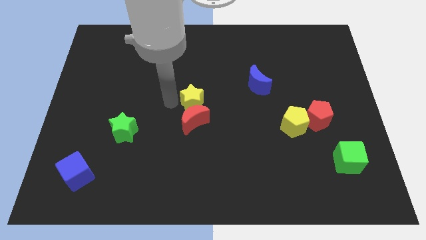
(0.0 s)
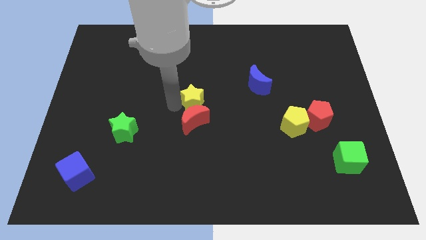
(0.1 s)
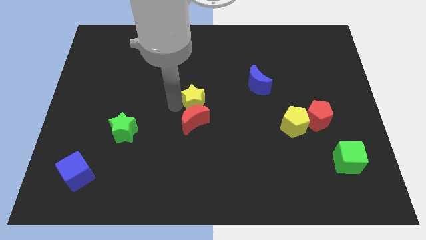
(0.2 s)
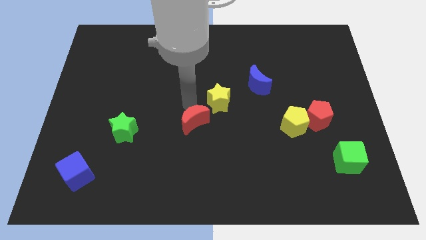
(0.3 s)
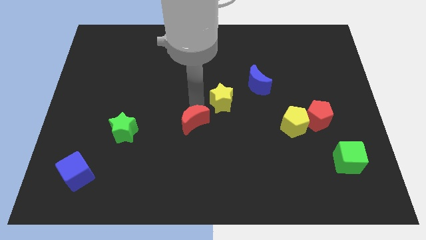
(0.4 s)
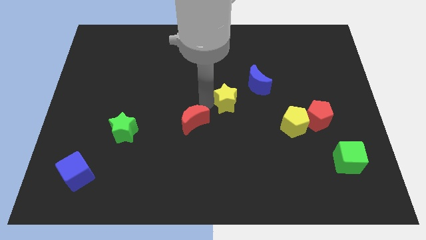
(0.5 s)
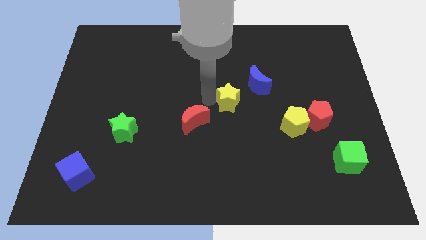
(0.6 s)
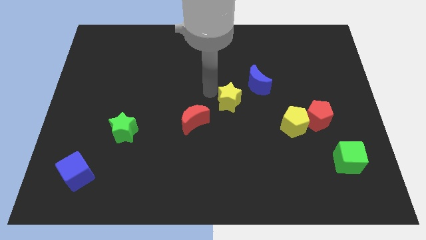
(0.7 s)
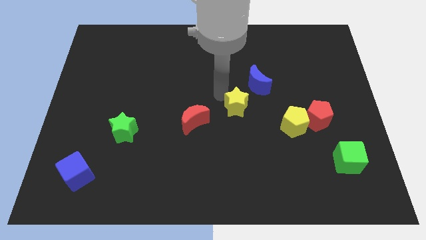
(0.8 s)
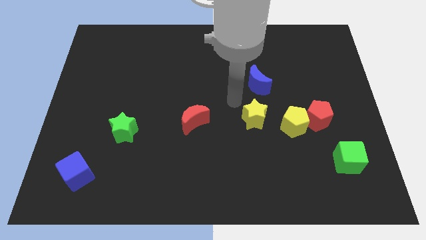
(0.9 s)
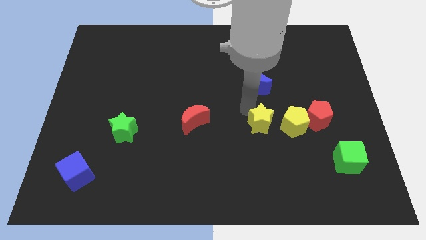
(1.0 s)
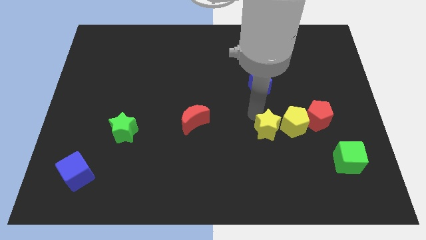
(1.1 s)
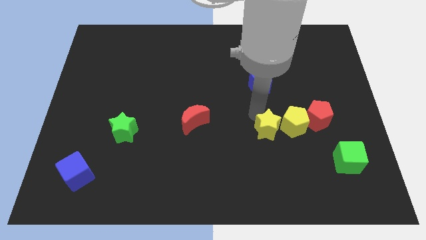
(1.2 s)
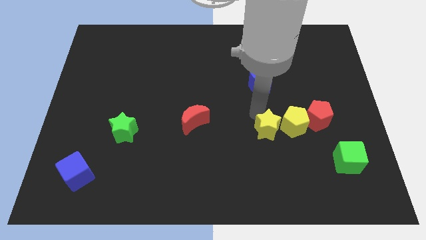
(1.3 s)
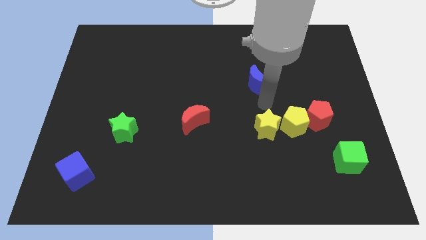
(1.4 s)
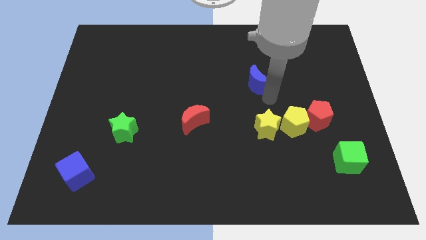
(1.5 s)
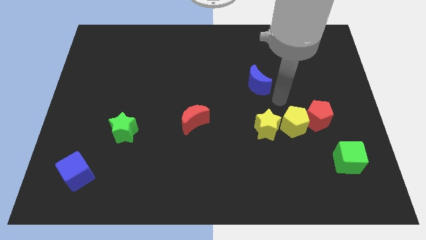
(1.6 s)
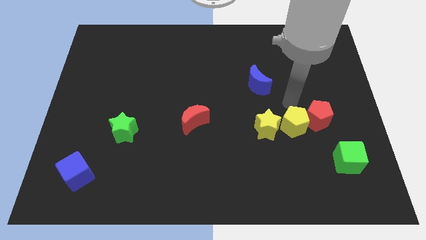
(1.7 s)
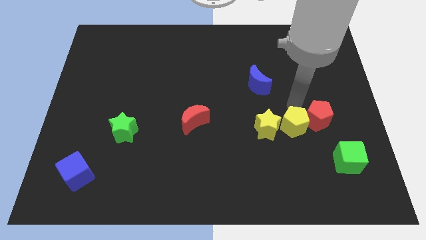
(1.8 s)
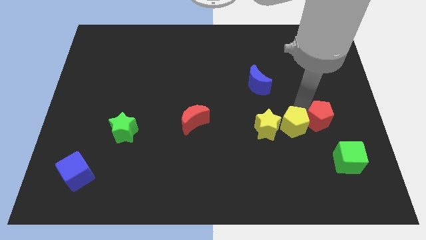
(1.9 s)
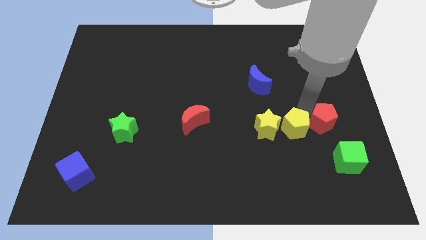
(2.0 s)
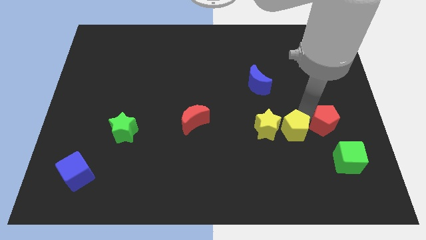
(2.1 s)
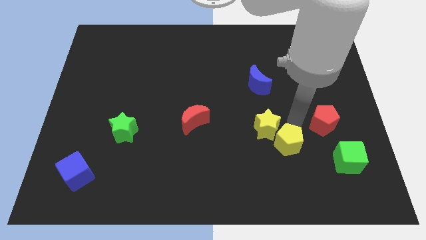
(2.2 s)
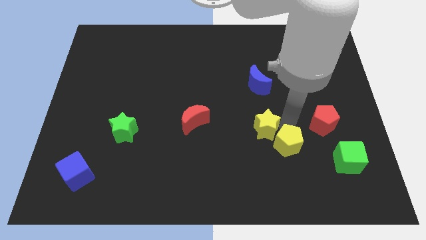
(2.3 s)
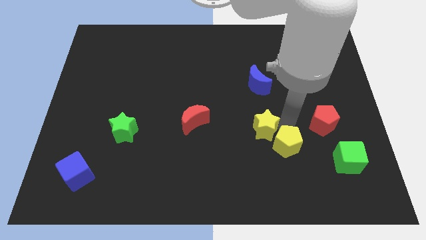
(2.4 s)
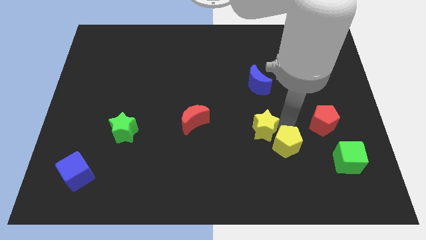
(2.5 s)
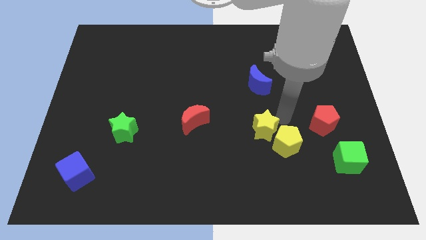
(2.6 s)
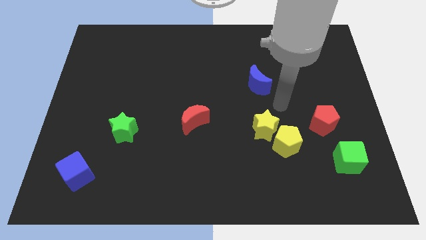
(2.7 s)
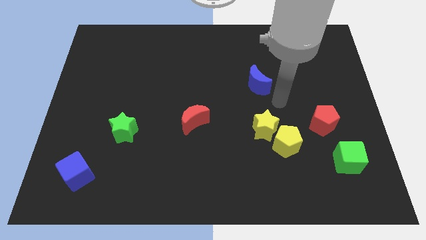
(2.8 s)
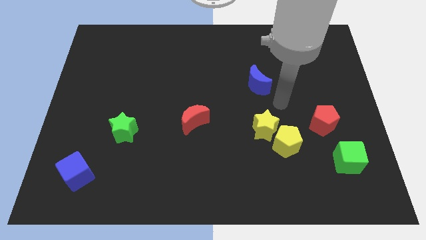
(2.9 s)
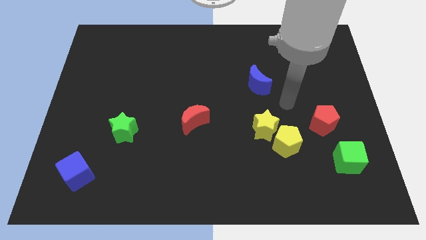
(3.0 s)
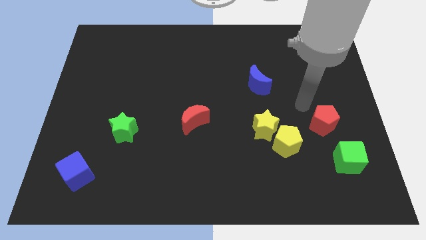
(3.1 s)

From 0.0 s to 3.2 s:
move the yellow star near to the yellow pentagon

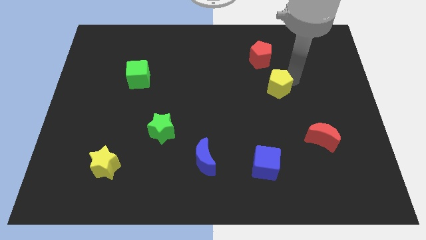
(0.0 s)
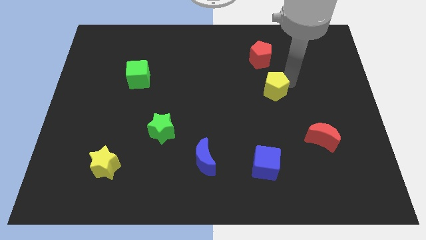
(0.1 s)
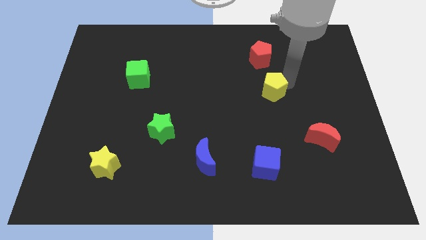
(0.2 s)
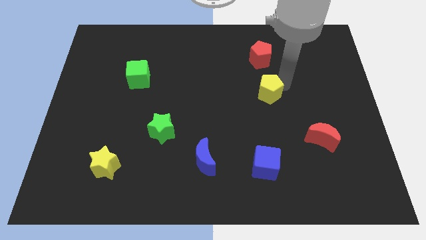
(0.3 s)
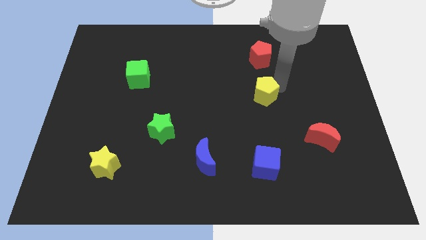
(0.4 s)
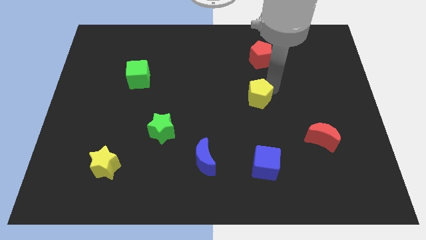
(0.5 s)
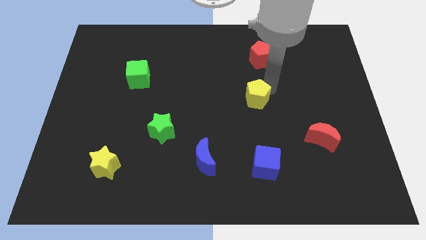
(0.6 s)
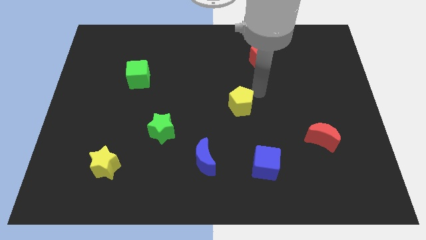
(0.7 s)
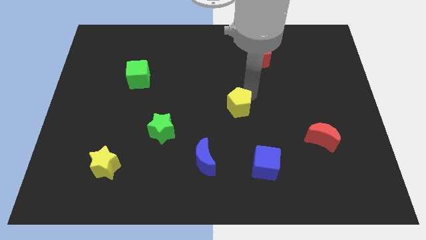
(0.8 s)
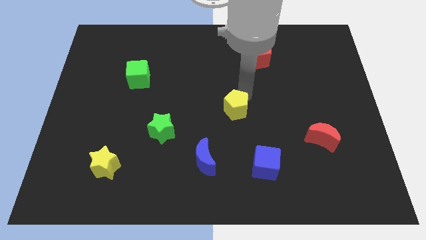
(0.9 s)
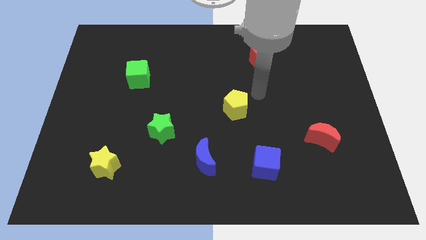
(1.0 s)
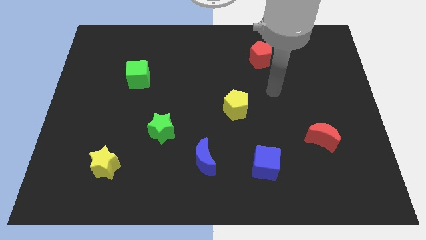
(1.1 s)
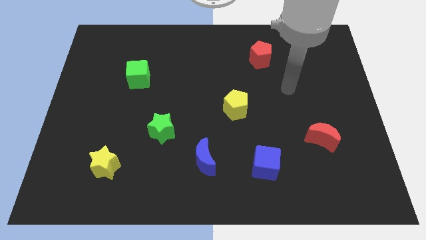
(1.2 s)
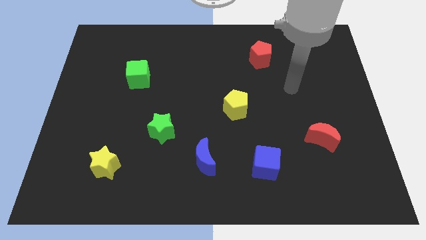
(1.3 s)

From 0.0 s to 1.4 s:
move yellow pentagon towards center

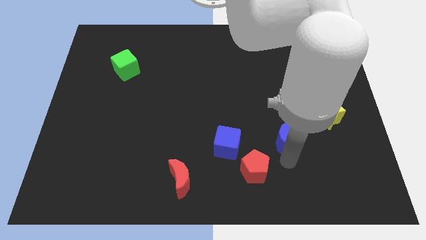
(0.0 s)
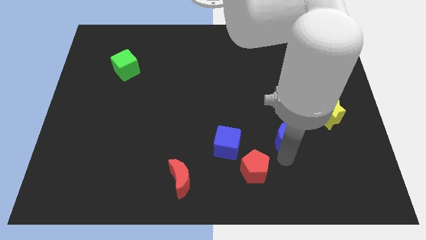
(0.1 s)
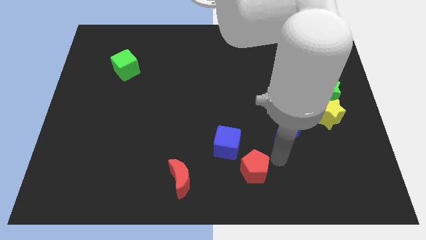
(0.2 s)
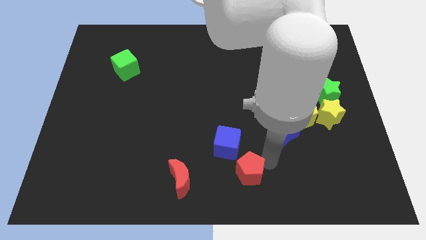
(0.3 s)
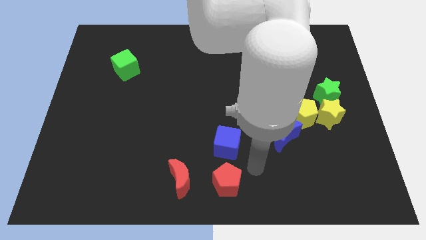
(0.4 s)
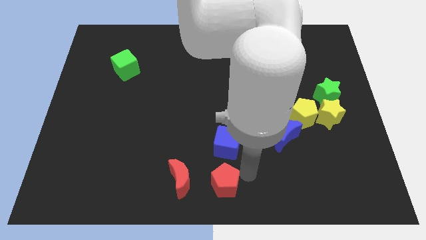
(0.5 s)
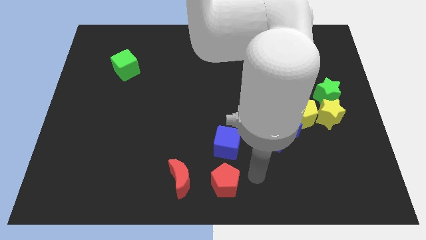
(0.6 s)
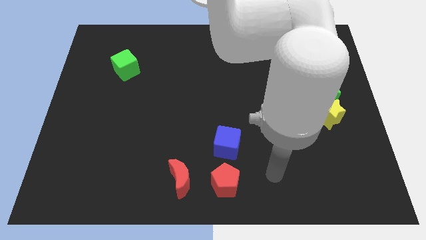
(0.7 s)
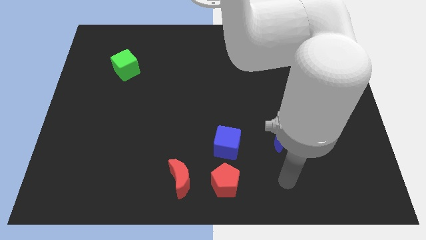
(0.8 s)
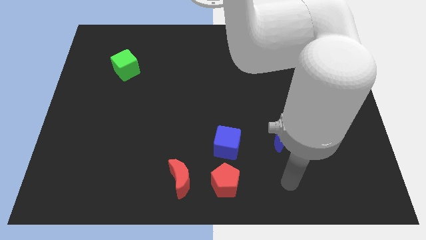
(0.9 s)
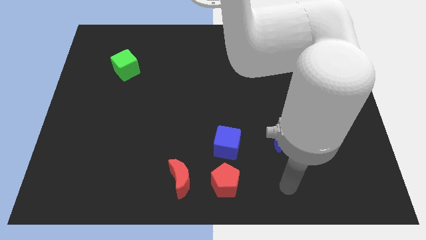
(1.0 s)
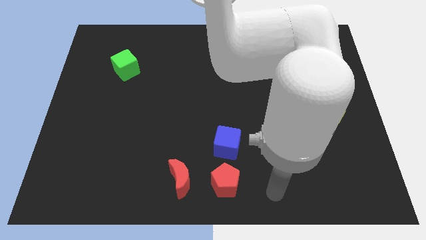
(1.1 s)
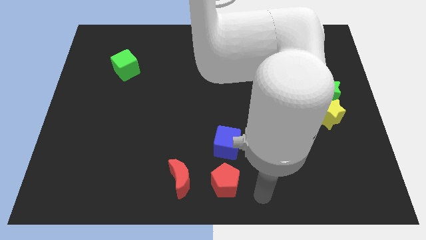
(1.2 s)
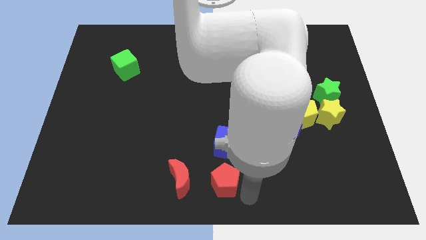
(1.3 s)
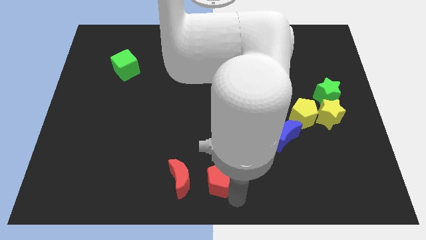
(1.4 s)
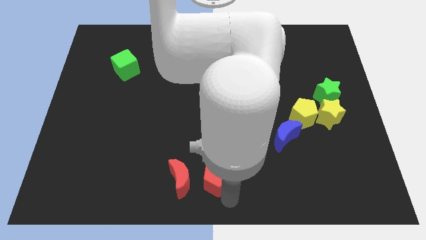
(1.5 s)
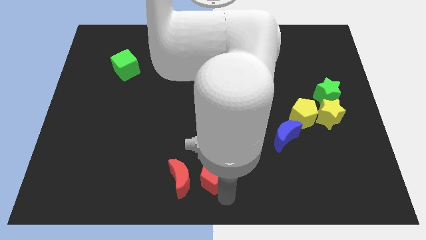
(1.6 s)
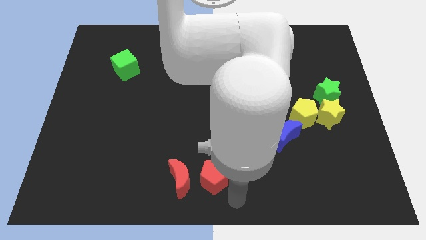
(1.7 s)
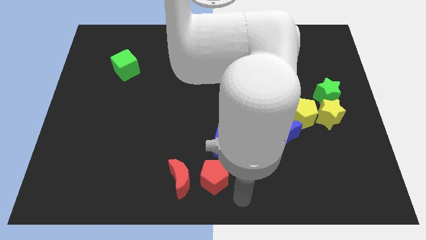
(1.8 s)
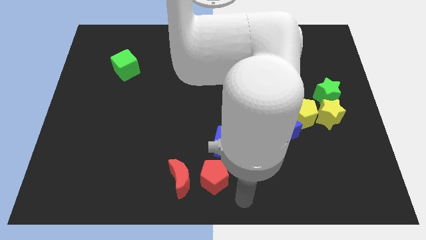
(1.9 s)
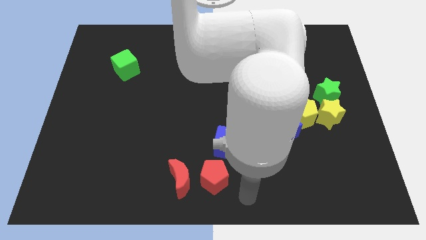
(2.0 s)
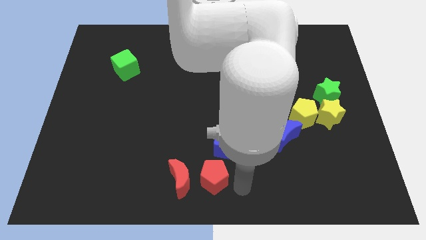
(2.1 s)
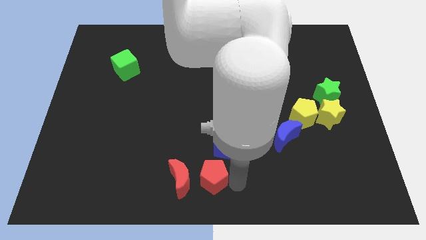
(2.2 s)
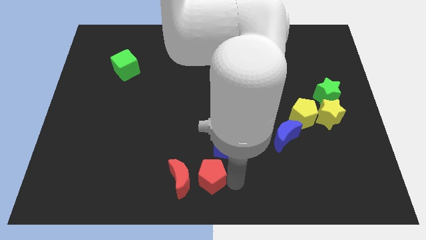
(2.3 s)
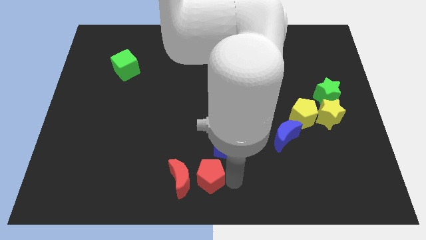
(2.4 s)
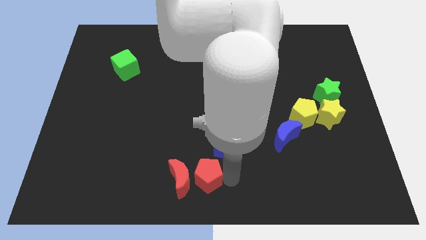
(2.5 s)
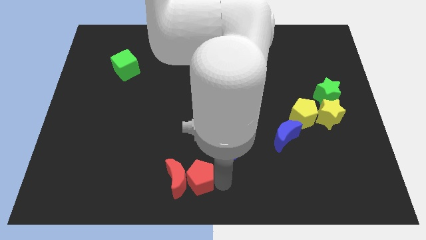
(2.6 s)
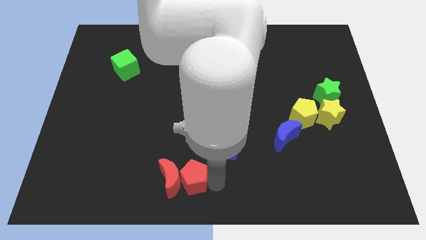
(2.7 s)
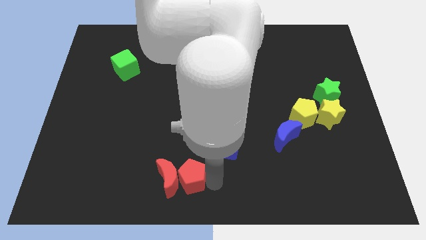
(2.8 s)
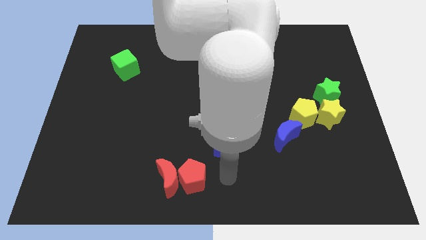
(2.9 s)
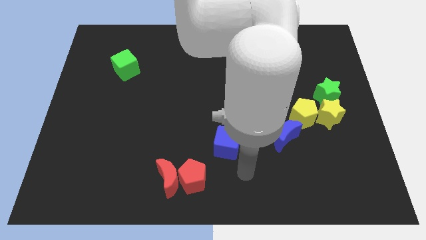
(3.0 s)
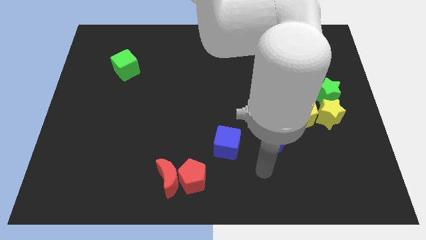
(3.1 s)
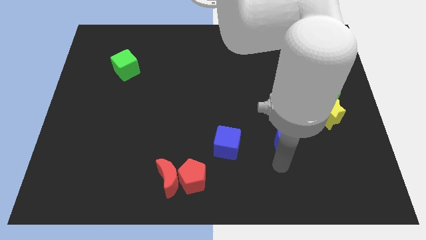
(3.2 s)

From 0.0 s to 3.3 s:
push the red pentagon into the red moon

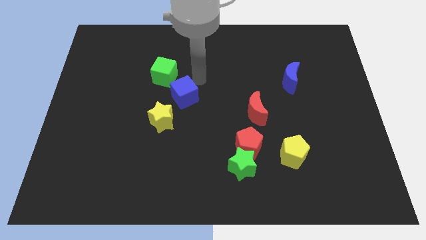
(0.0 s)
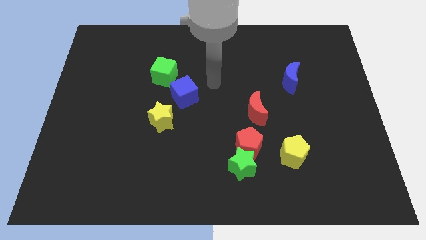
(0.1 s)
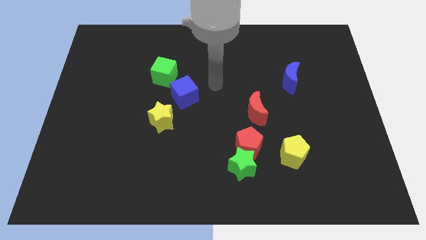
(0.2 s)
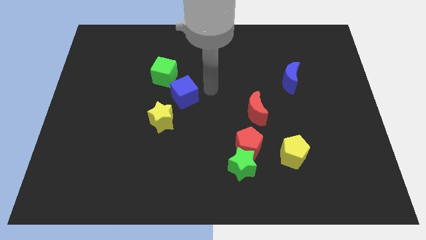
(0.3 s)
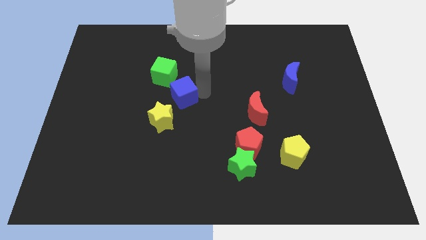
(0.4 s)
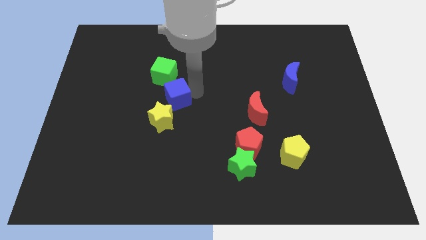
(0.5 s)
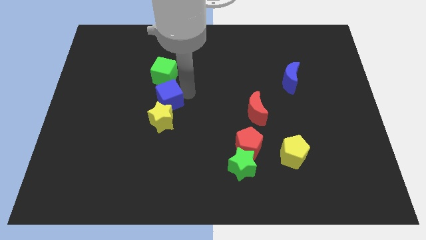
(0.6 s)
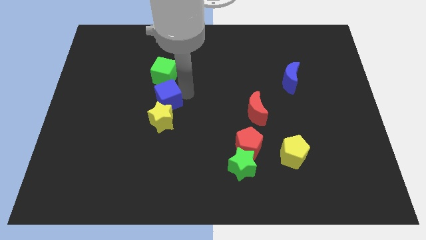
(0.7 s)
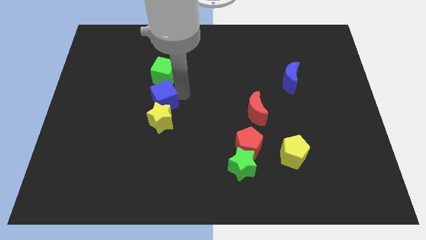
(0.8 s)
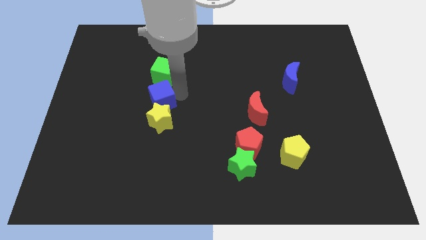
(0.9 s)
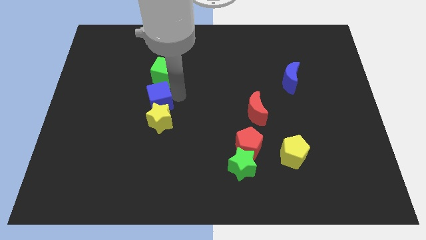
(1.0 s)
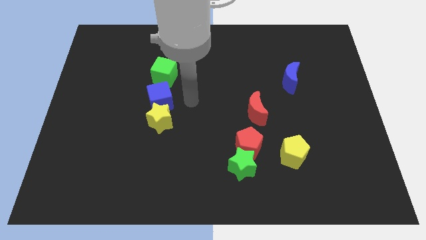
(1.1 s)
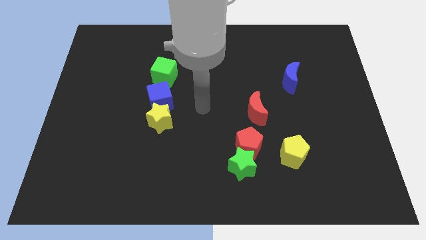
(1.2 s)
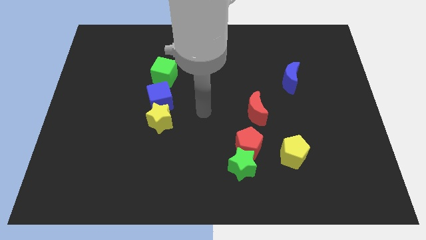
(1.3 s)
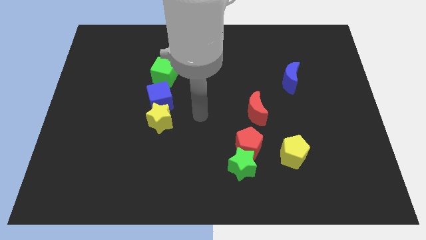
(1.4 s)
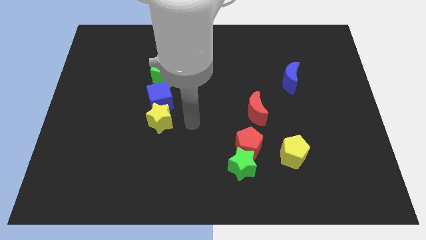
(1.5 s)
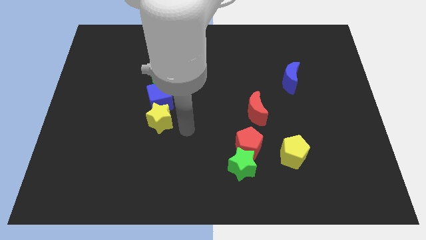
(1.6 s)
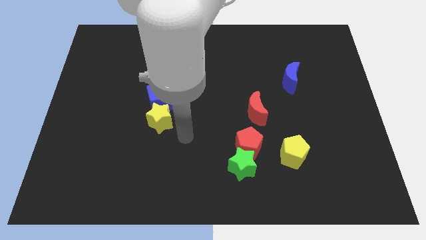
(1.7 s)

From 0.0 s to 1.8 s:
move the blue cube below the green cube
